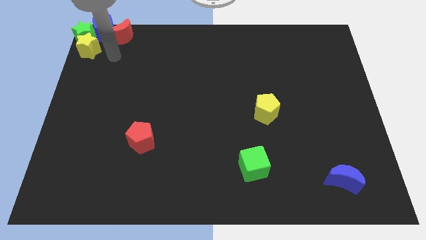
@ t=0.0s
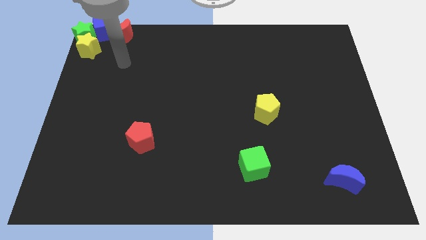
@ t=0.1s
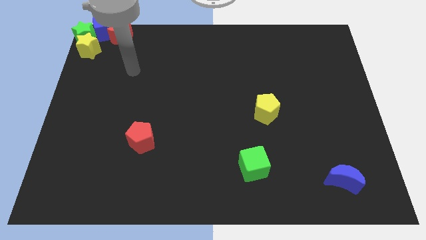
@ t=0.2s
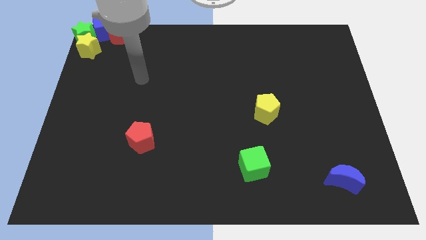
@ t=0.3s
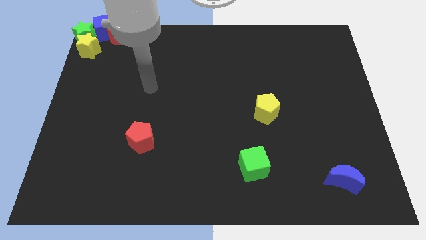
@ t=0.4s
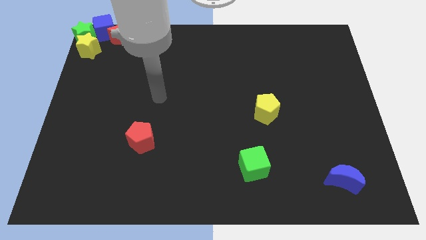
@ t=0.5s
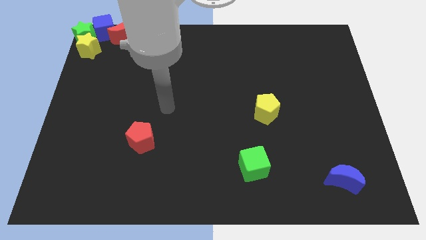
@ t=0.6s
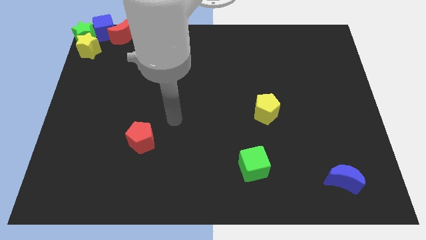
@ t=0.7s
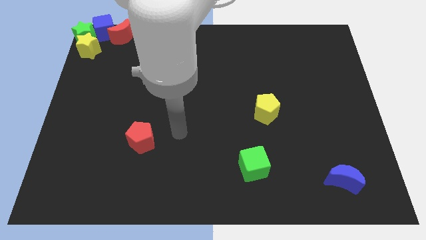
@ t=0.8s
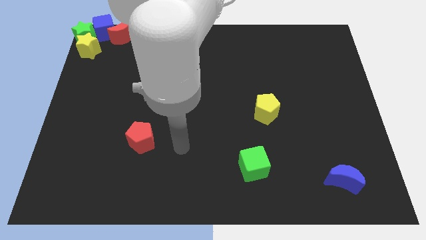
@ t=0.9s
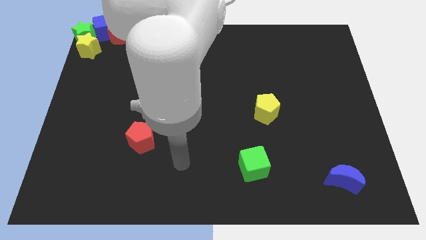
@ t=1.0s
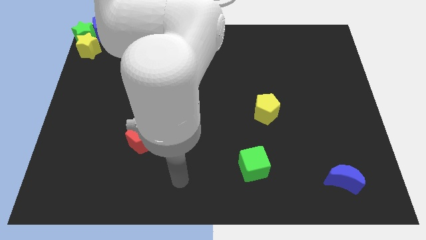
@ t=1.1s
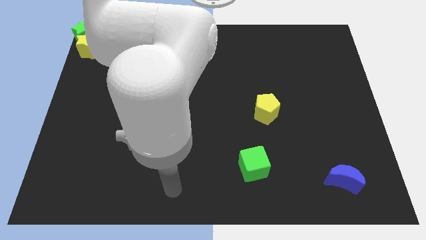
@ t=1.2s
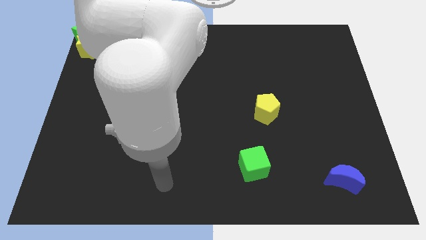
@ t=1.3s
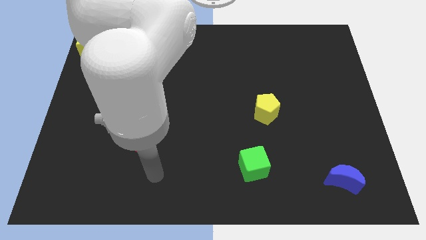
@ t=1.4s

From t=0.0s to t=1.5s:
move your arm away from yellow star

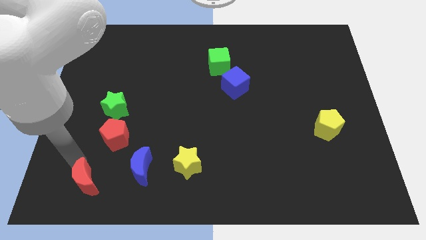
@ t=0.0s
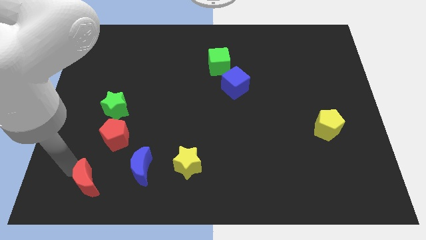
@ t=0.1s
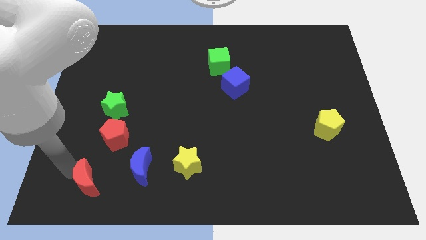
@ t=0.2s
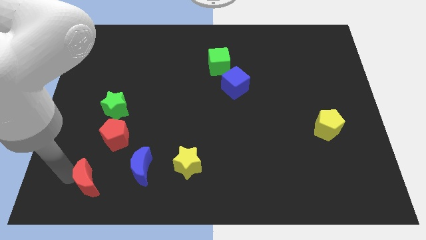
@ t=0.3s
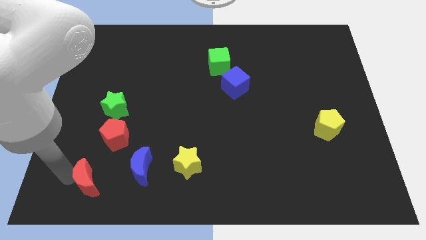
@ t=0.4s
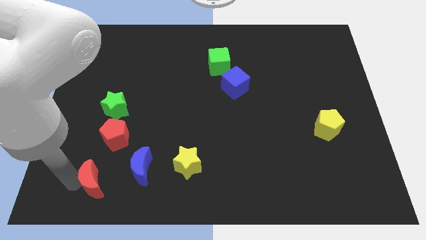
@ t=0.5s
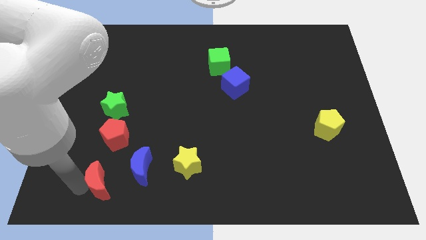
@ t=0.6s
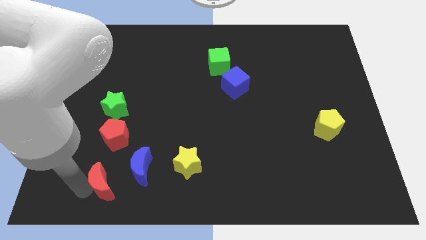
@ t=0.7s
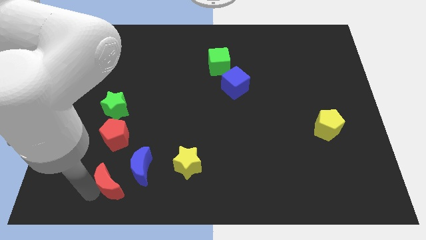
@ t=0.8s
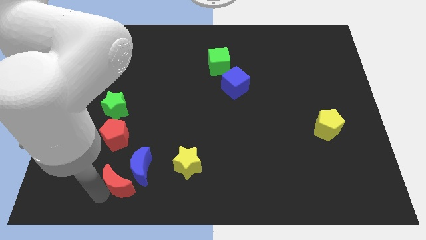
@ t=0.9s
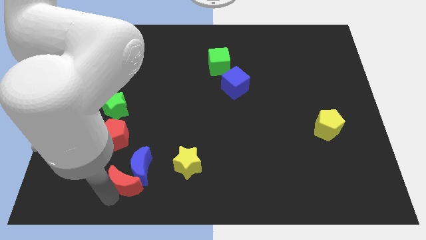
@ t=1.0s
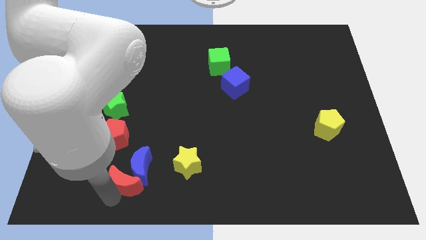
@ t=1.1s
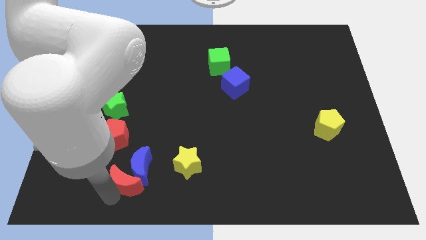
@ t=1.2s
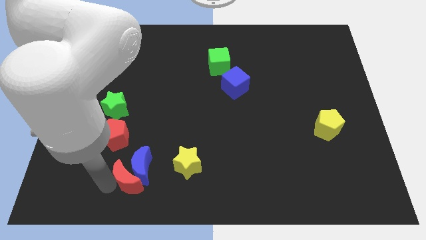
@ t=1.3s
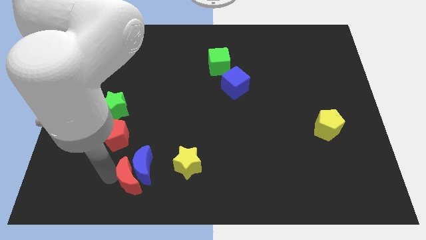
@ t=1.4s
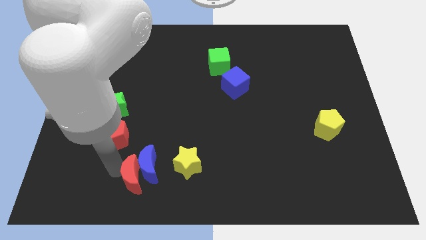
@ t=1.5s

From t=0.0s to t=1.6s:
push the red moon into the blue moon

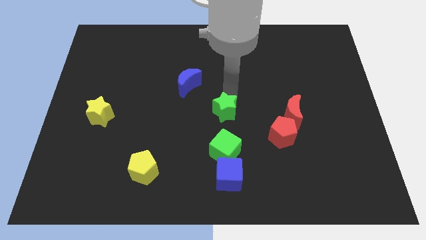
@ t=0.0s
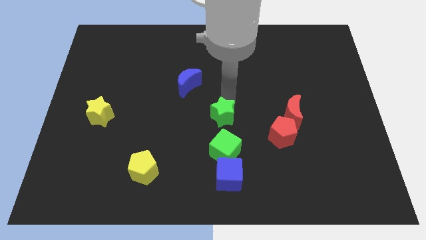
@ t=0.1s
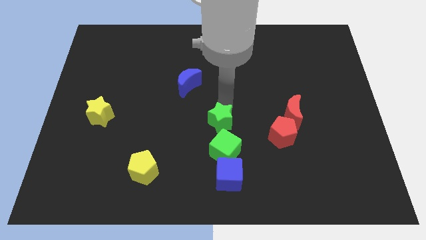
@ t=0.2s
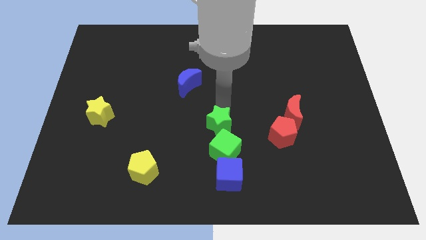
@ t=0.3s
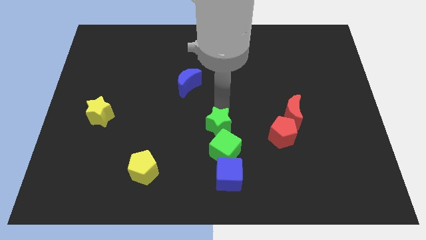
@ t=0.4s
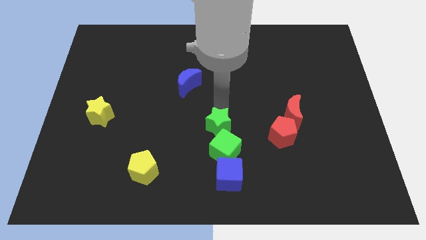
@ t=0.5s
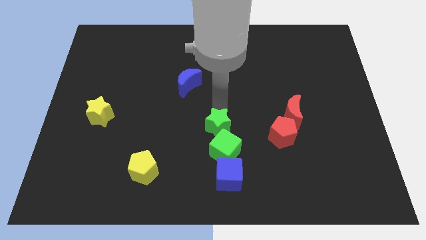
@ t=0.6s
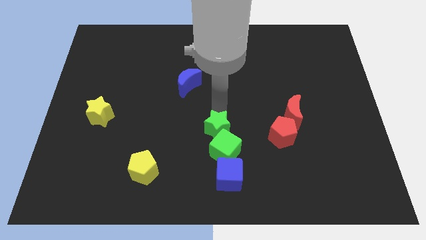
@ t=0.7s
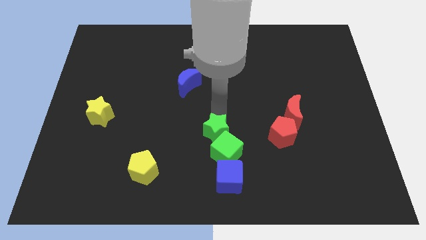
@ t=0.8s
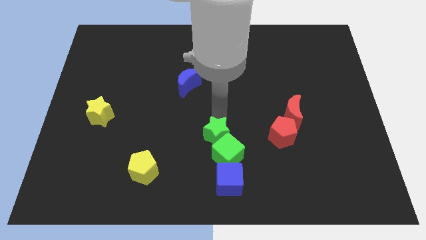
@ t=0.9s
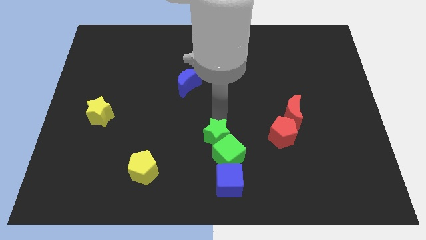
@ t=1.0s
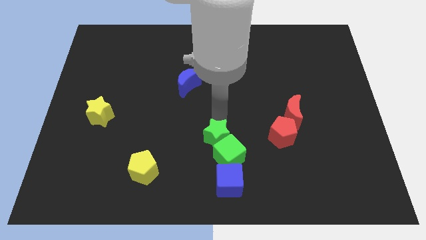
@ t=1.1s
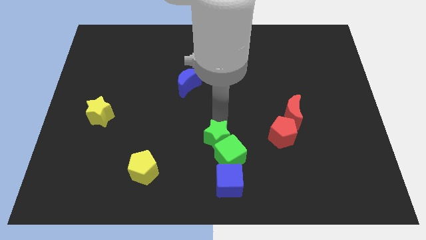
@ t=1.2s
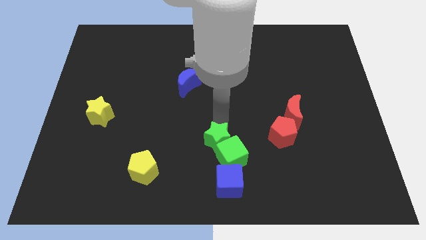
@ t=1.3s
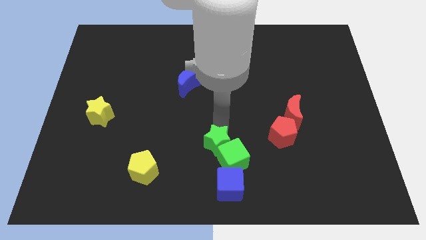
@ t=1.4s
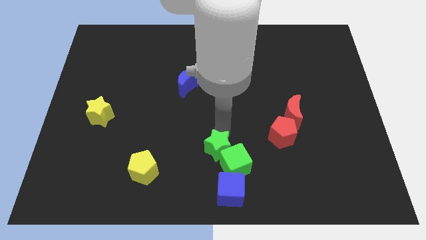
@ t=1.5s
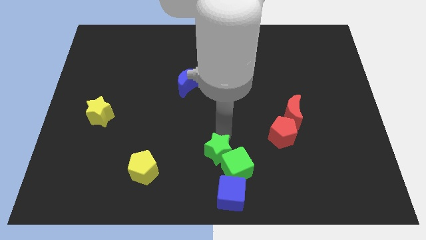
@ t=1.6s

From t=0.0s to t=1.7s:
push the green star into the green cube

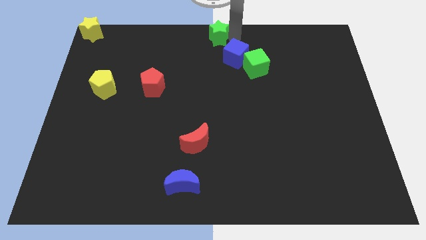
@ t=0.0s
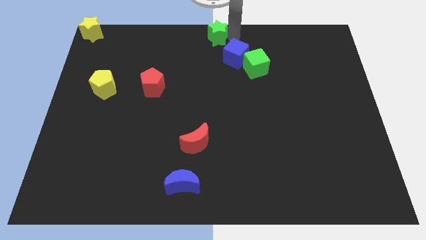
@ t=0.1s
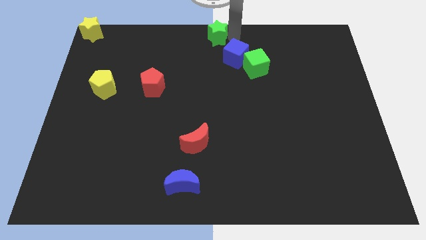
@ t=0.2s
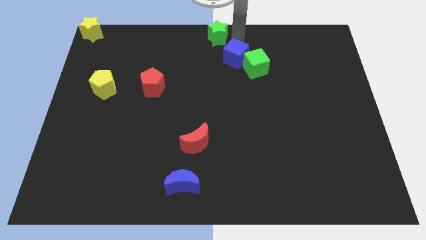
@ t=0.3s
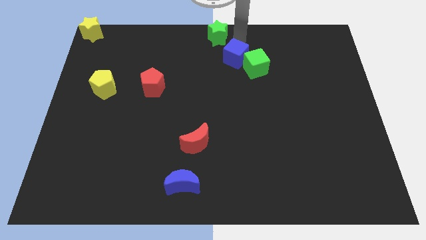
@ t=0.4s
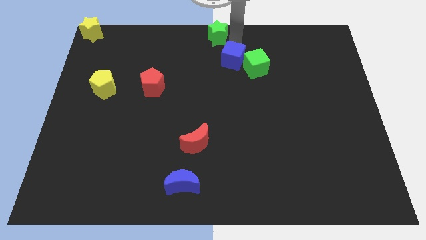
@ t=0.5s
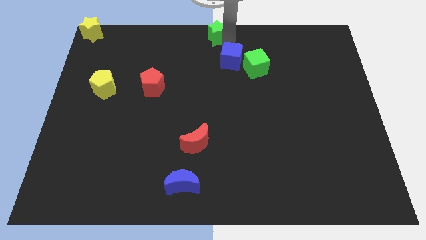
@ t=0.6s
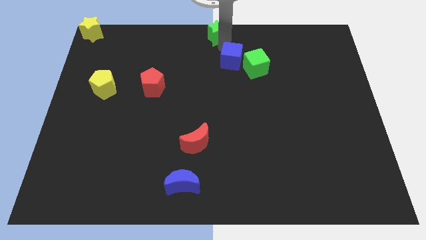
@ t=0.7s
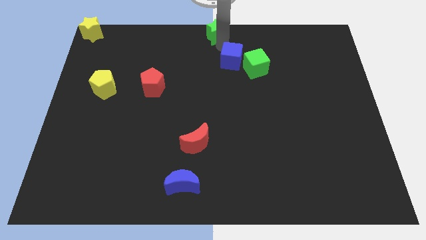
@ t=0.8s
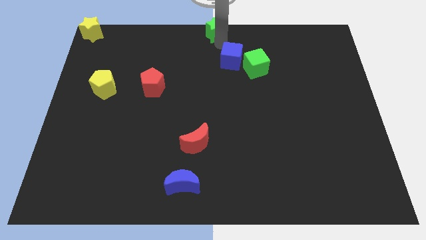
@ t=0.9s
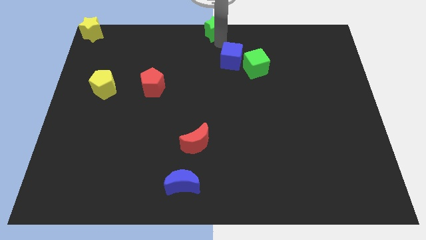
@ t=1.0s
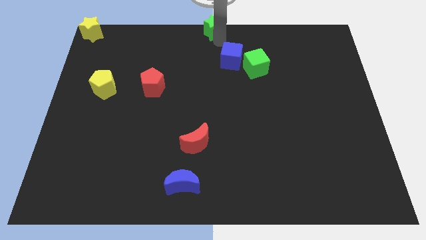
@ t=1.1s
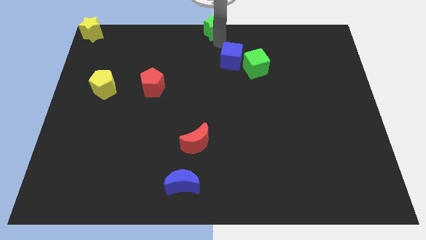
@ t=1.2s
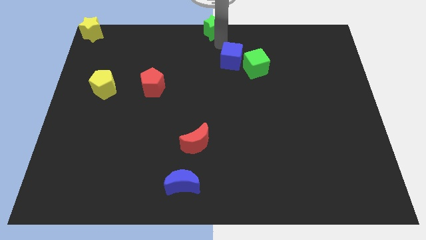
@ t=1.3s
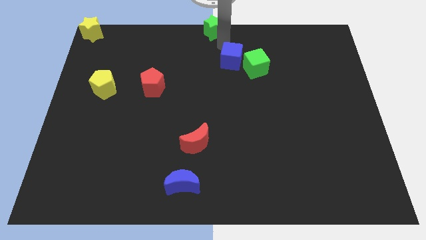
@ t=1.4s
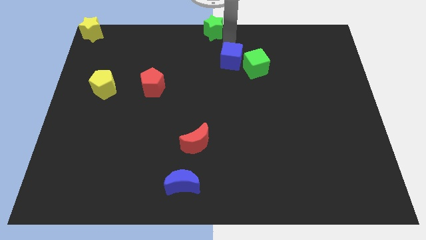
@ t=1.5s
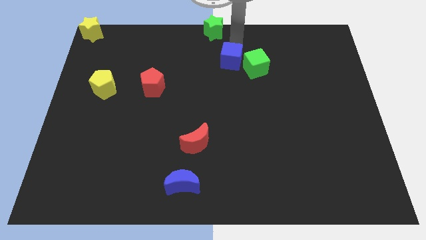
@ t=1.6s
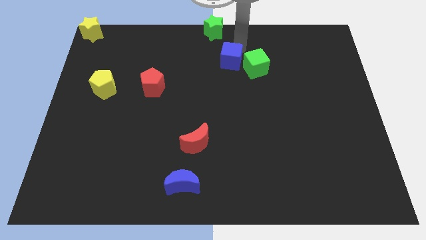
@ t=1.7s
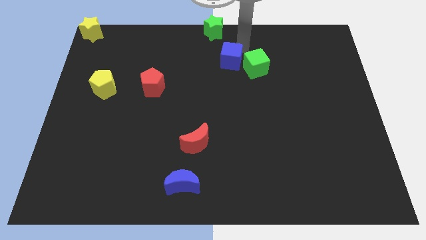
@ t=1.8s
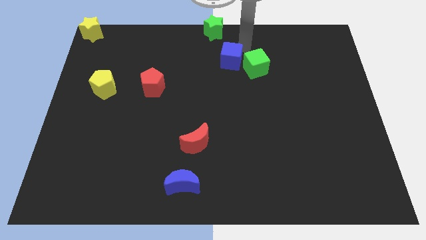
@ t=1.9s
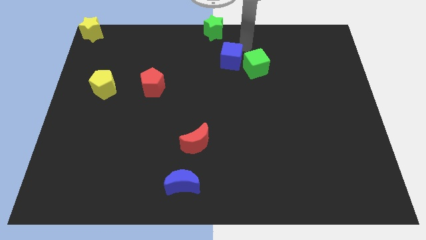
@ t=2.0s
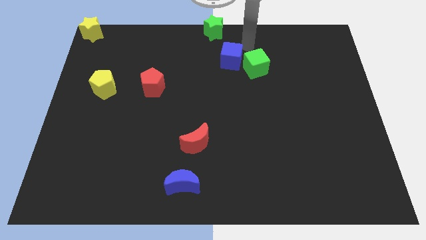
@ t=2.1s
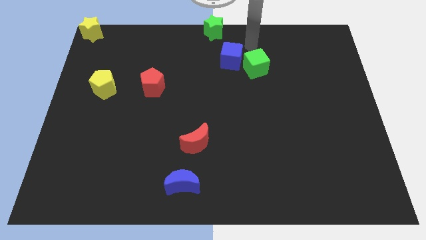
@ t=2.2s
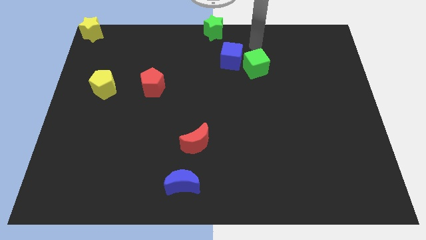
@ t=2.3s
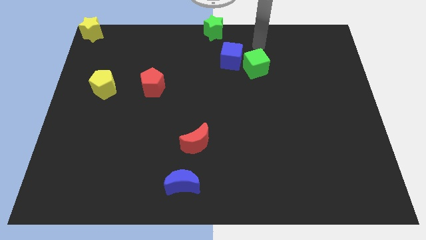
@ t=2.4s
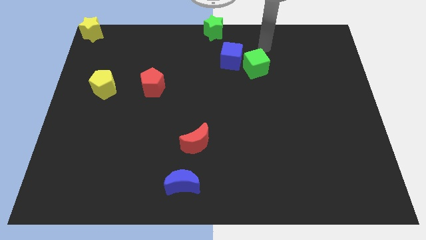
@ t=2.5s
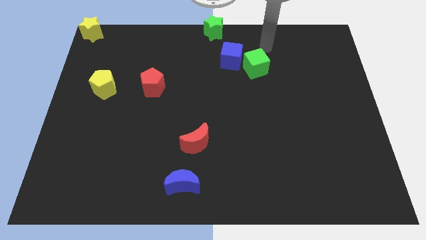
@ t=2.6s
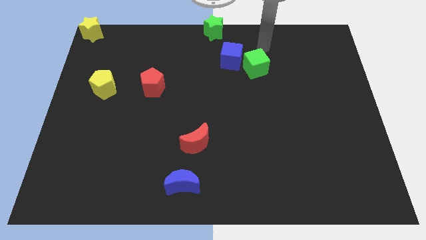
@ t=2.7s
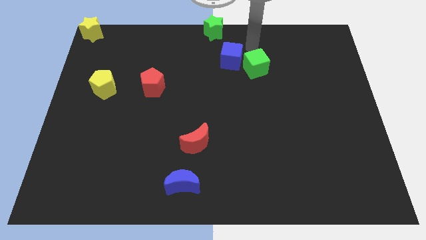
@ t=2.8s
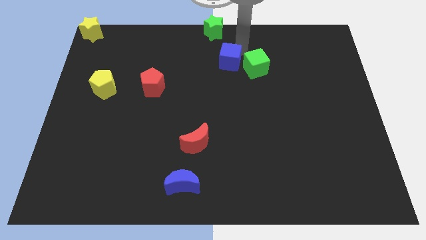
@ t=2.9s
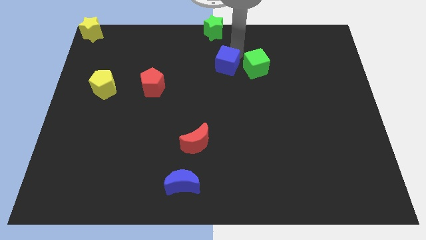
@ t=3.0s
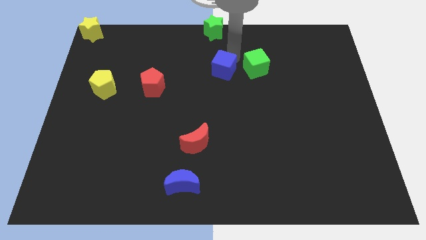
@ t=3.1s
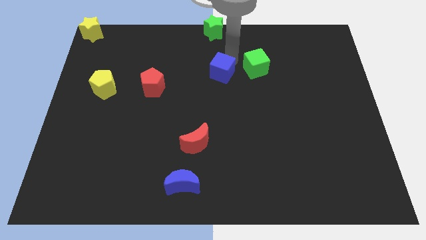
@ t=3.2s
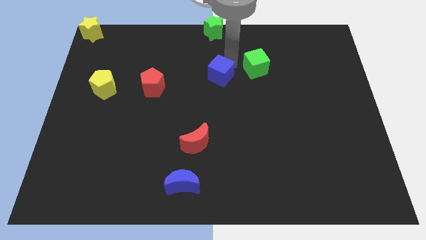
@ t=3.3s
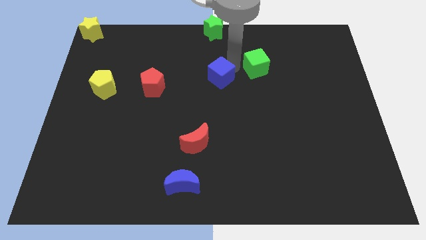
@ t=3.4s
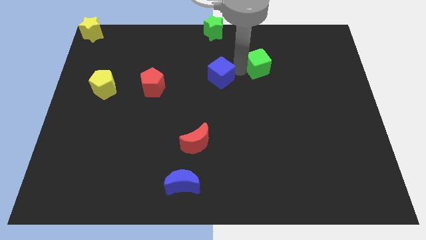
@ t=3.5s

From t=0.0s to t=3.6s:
place blue cube below green star

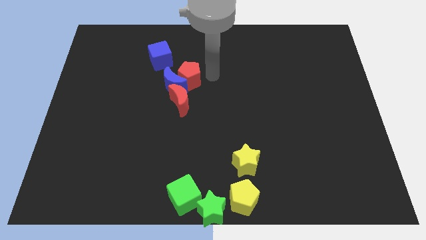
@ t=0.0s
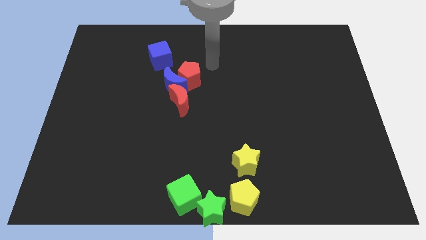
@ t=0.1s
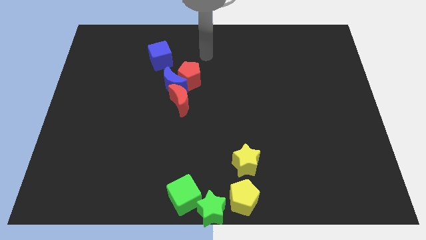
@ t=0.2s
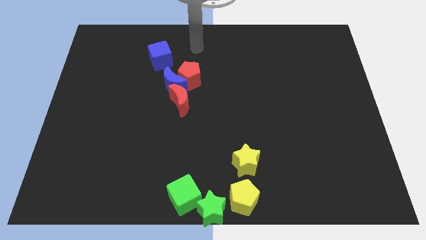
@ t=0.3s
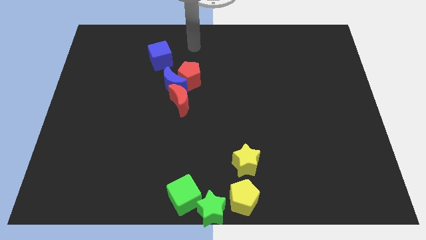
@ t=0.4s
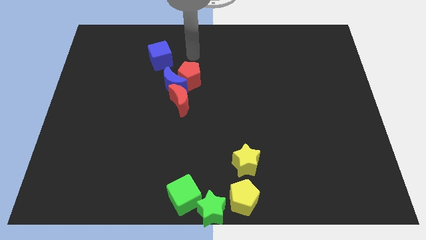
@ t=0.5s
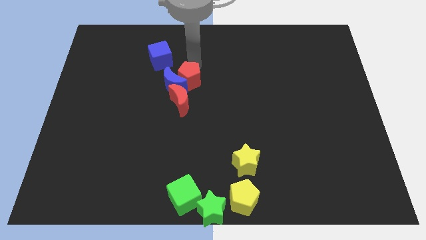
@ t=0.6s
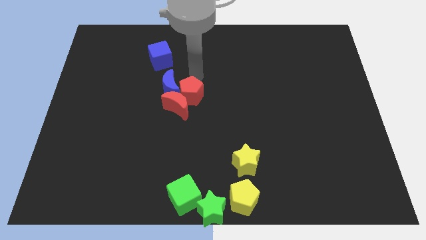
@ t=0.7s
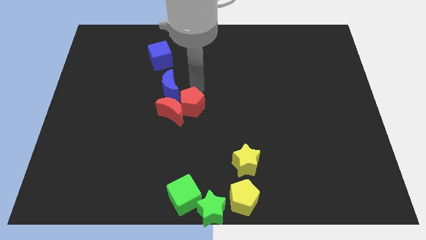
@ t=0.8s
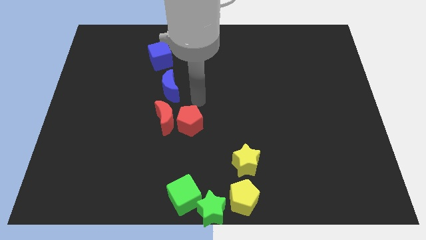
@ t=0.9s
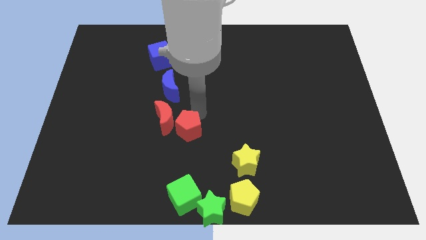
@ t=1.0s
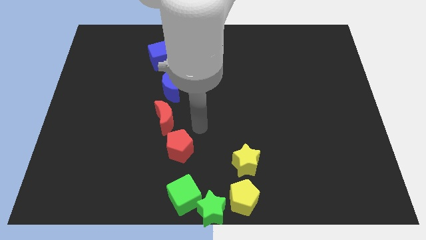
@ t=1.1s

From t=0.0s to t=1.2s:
push the red pentagon to the right of the red crescent
